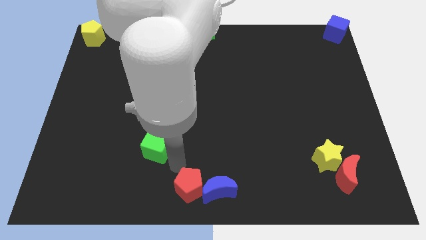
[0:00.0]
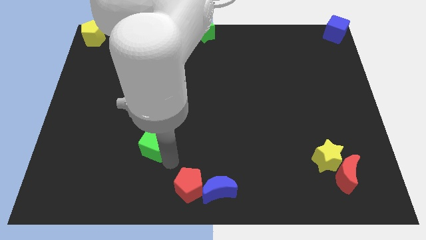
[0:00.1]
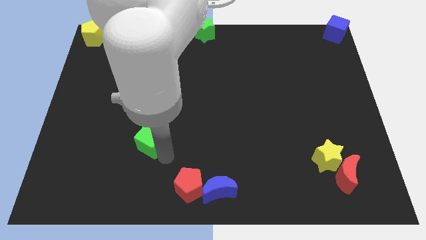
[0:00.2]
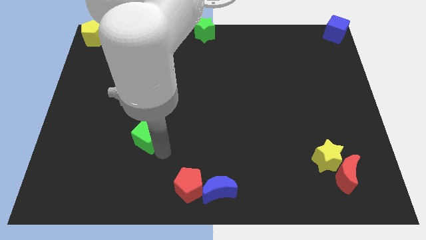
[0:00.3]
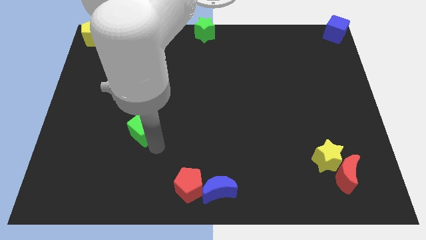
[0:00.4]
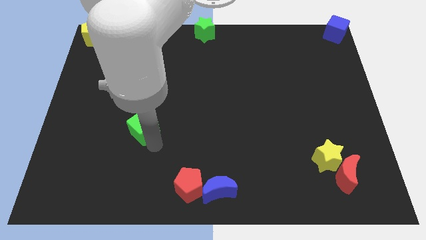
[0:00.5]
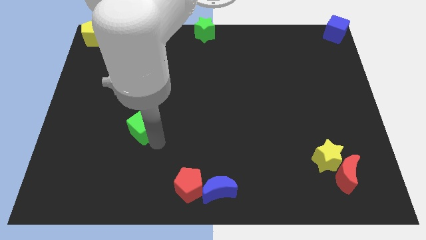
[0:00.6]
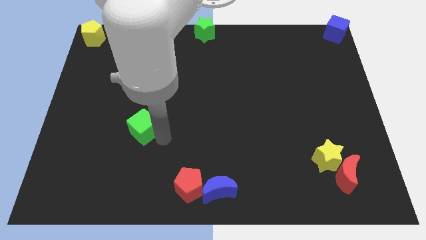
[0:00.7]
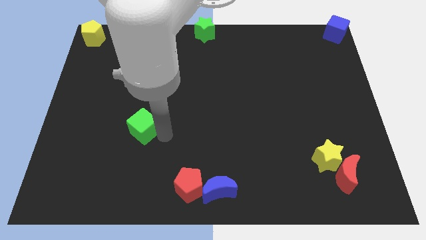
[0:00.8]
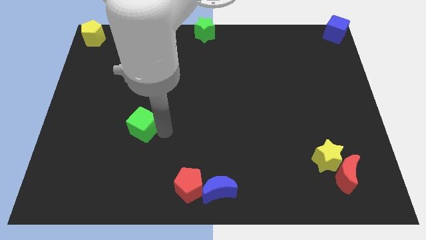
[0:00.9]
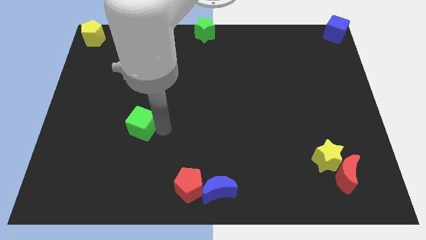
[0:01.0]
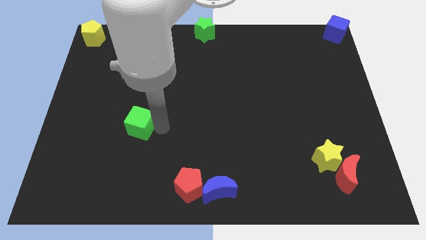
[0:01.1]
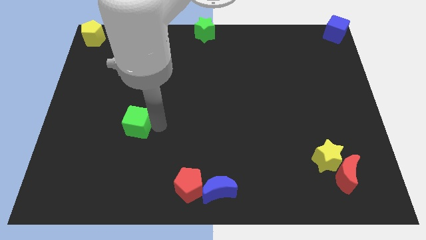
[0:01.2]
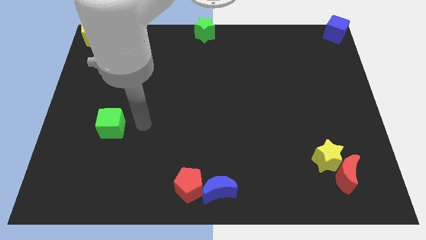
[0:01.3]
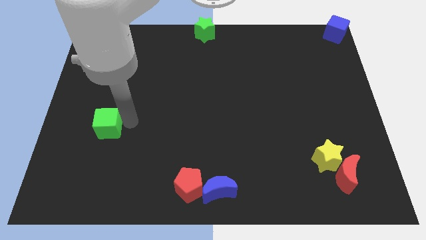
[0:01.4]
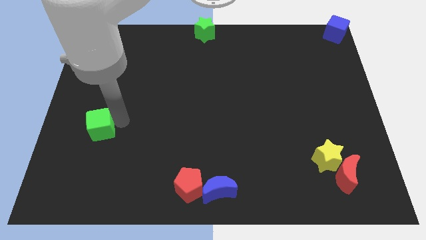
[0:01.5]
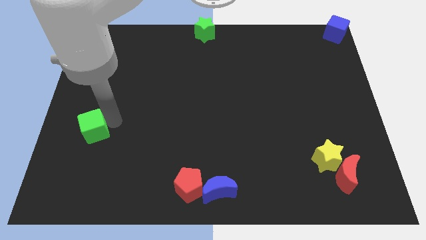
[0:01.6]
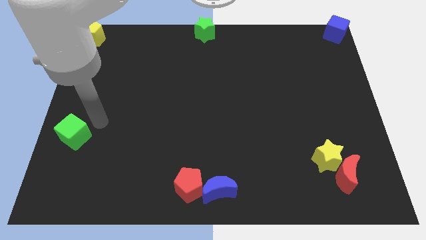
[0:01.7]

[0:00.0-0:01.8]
move the green cube towards the left side of the board

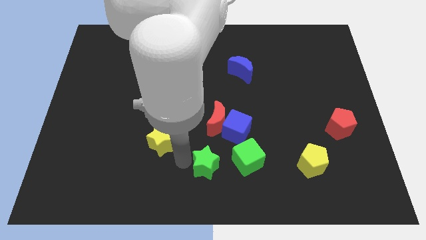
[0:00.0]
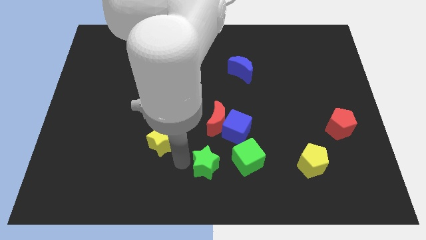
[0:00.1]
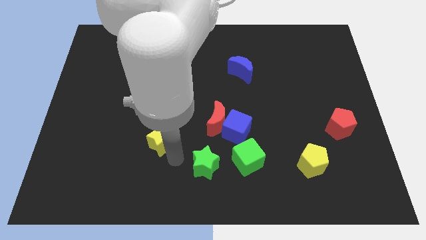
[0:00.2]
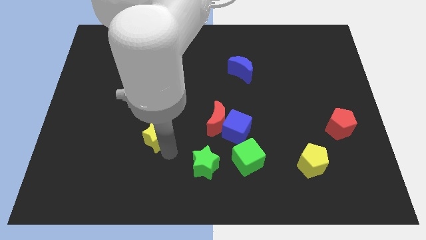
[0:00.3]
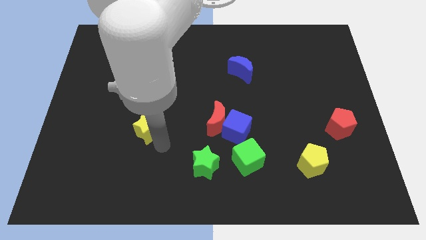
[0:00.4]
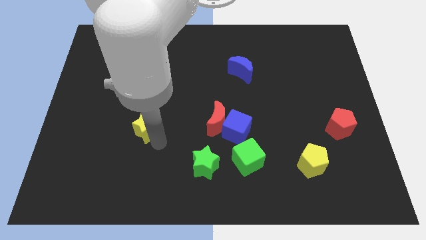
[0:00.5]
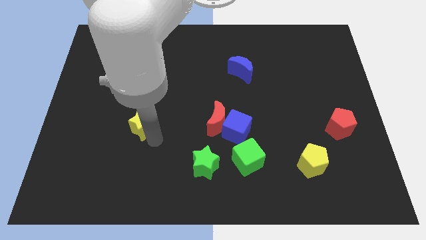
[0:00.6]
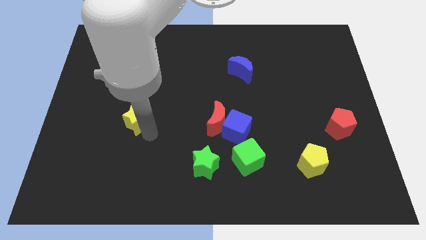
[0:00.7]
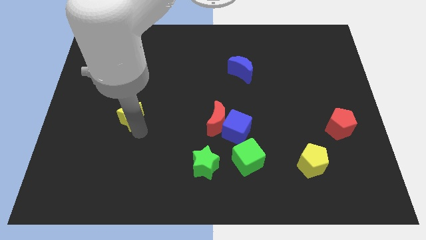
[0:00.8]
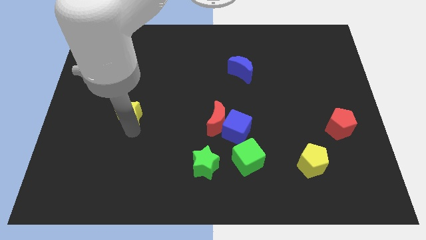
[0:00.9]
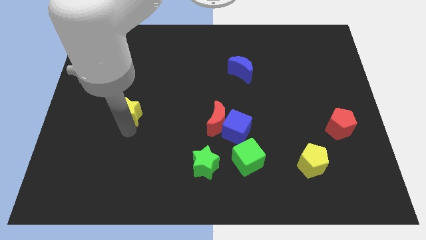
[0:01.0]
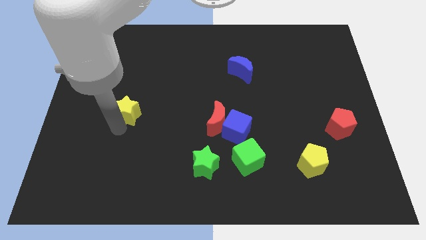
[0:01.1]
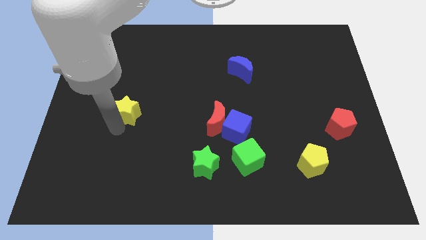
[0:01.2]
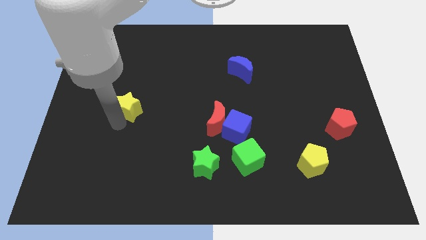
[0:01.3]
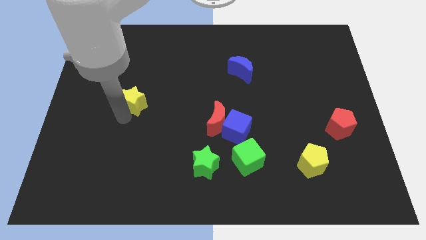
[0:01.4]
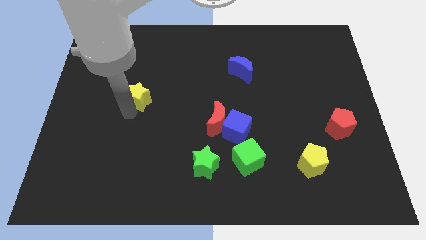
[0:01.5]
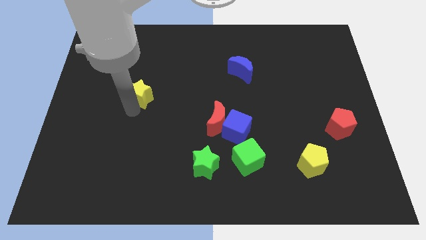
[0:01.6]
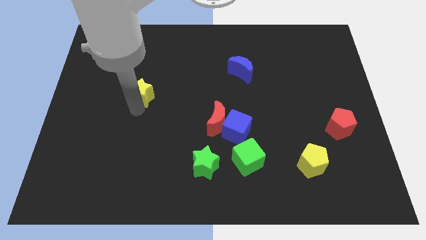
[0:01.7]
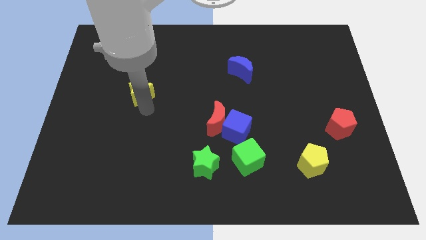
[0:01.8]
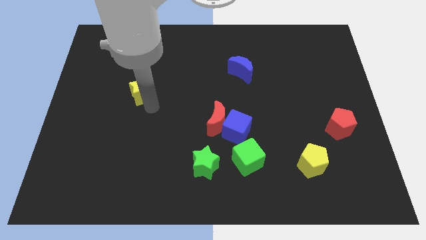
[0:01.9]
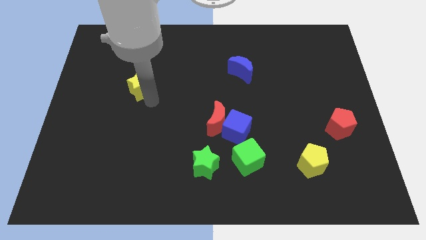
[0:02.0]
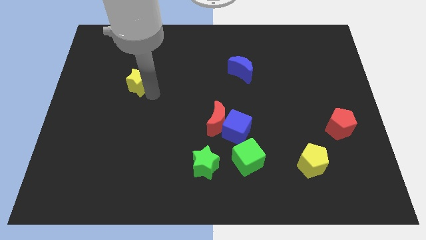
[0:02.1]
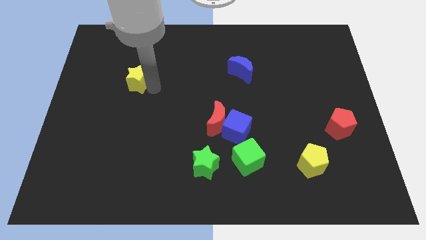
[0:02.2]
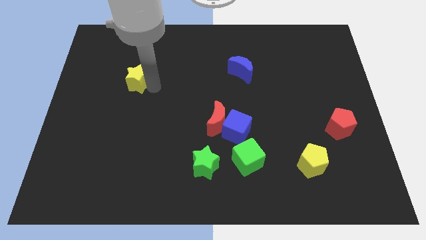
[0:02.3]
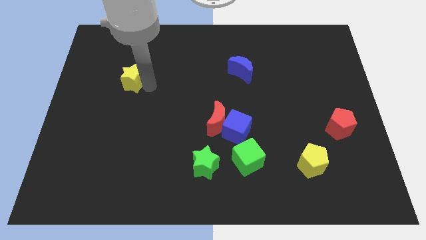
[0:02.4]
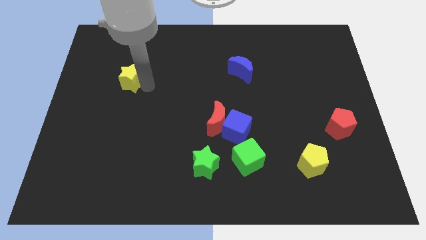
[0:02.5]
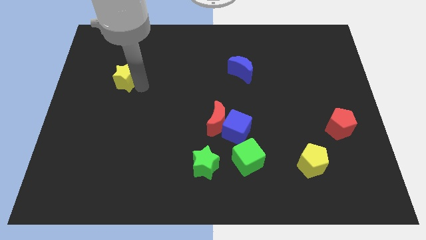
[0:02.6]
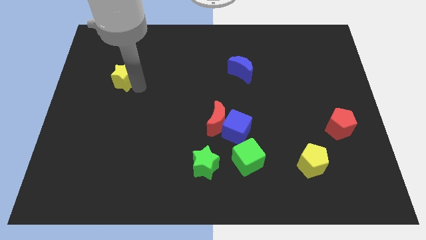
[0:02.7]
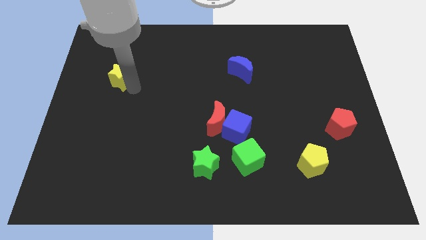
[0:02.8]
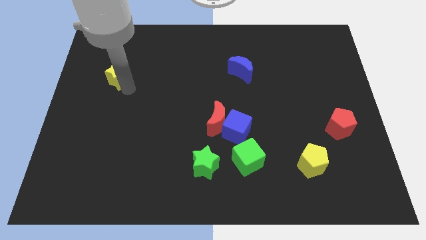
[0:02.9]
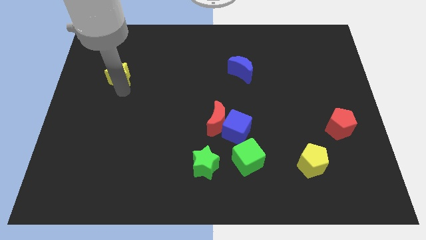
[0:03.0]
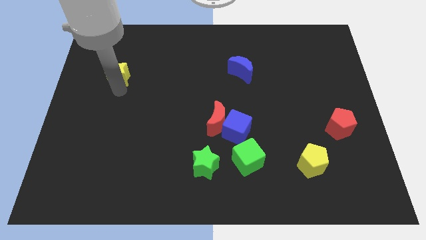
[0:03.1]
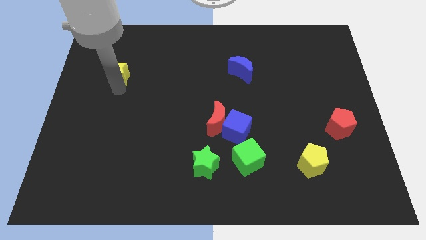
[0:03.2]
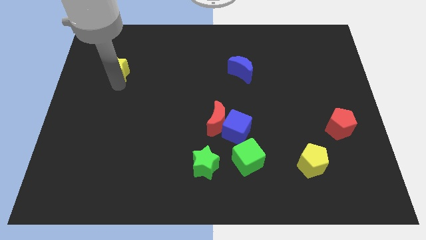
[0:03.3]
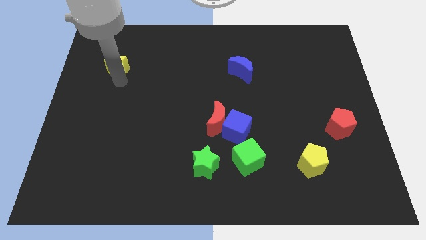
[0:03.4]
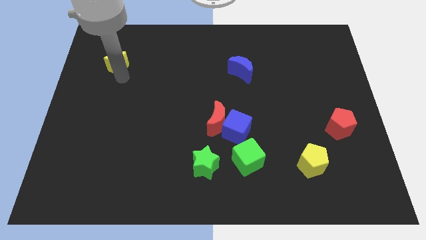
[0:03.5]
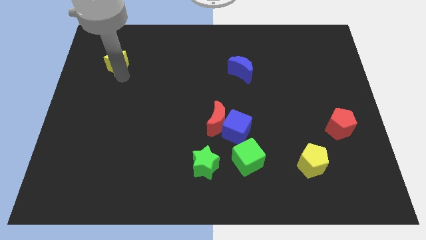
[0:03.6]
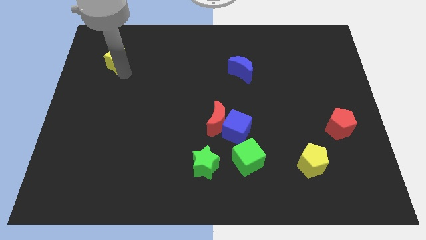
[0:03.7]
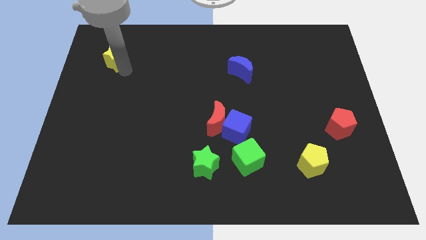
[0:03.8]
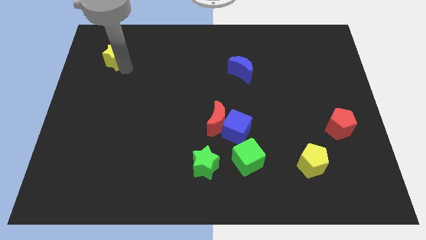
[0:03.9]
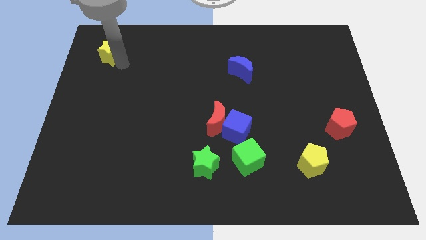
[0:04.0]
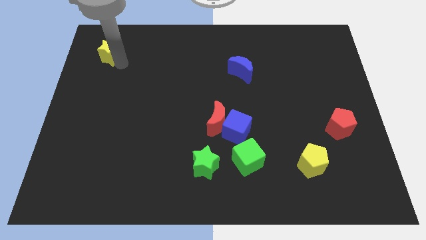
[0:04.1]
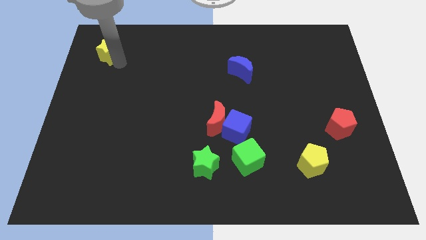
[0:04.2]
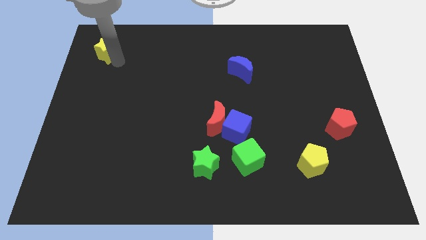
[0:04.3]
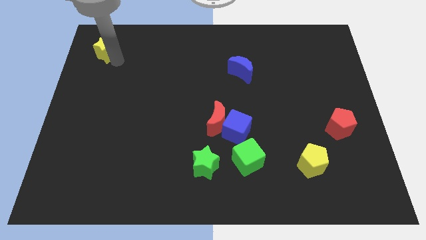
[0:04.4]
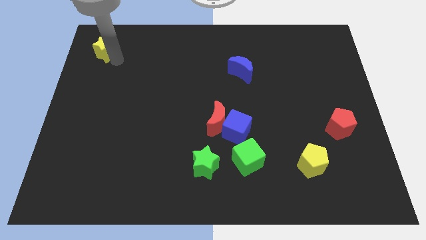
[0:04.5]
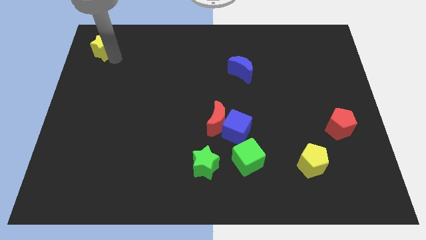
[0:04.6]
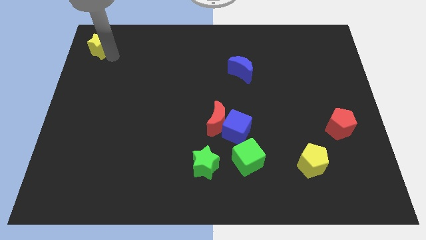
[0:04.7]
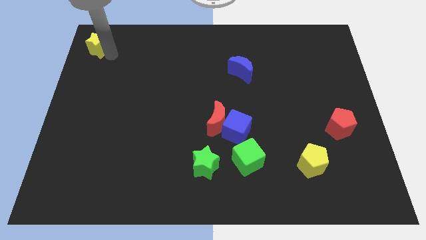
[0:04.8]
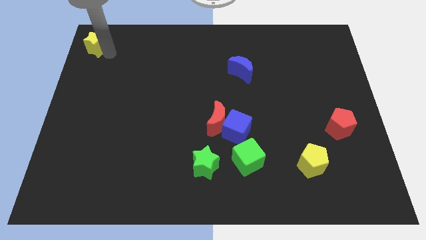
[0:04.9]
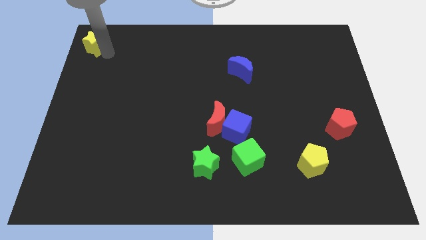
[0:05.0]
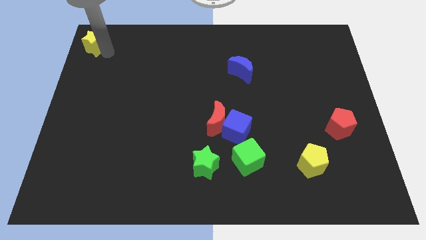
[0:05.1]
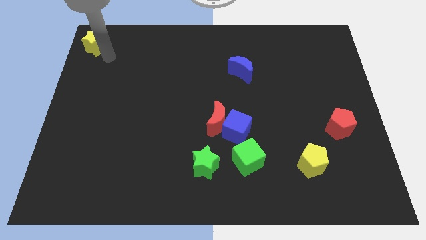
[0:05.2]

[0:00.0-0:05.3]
move the yellow star to the top left of the board

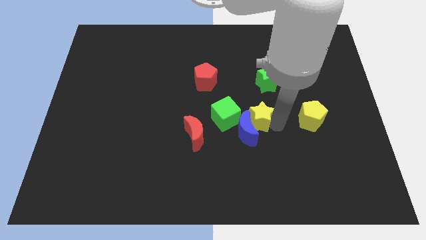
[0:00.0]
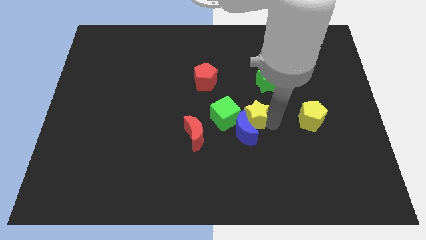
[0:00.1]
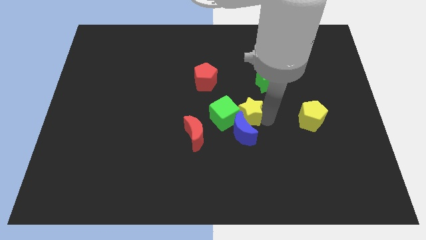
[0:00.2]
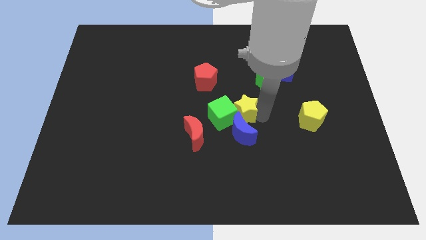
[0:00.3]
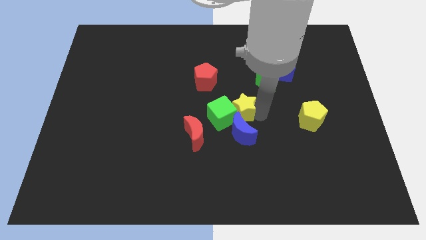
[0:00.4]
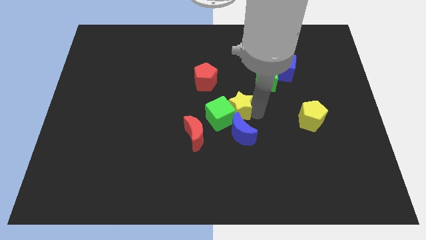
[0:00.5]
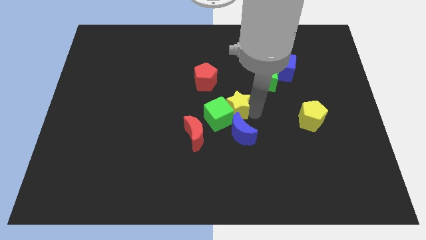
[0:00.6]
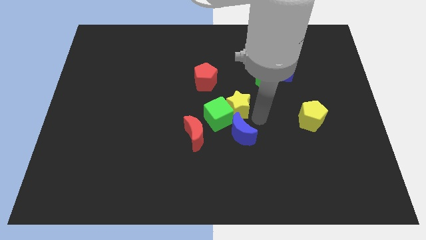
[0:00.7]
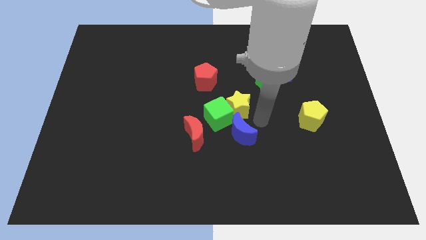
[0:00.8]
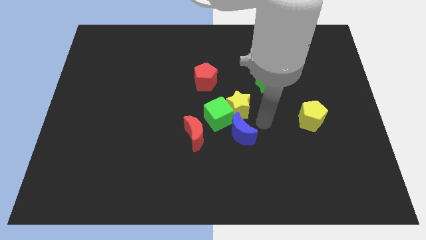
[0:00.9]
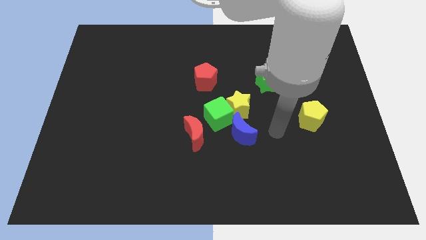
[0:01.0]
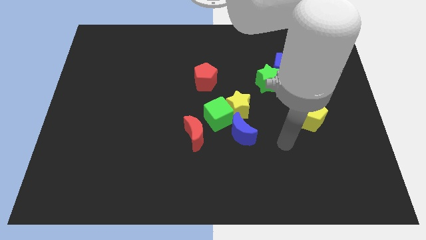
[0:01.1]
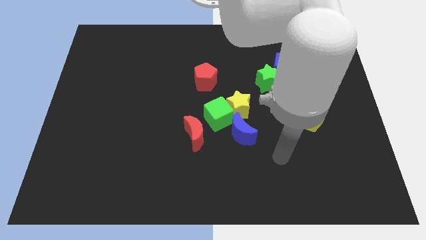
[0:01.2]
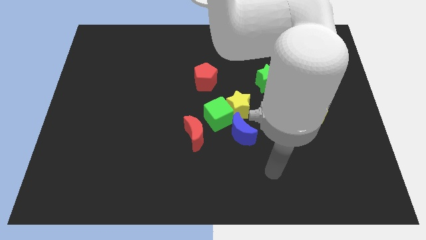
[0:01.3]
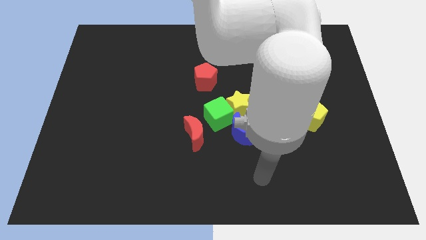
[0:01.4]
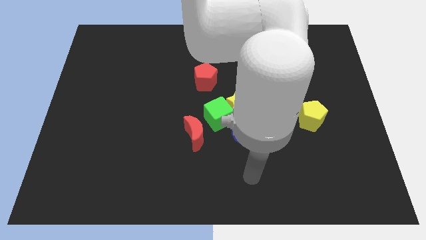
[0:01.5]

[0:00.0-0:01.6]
place the yellow star to the top right side of the green cube

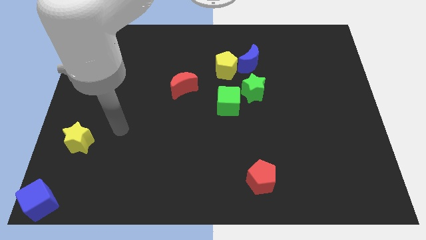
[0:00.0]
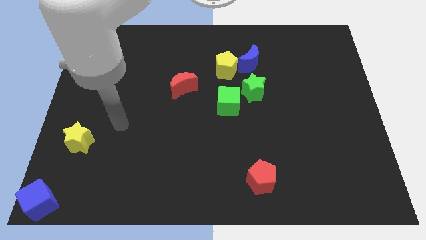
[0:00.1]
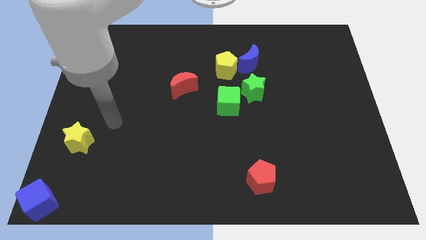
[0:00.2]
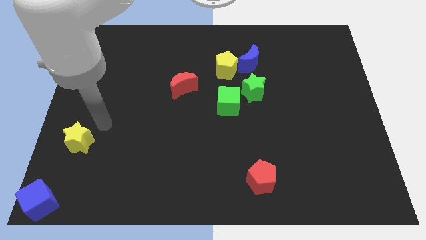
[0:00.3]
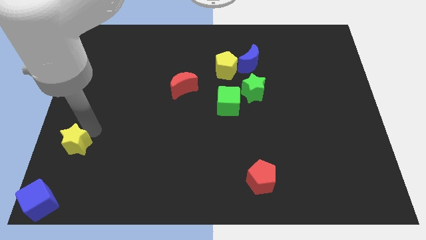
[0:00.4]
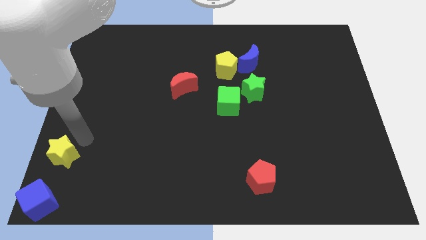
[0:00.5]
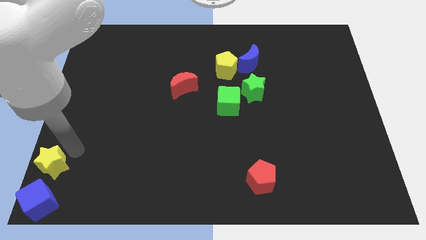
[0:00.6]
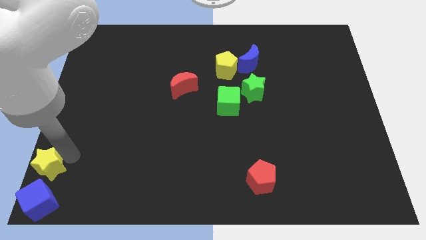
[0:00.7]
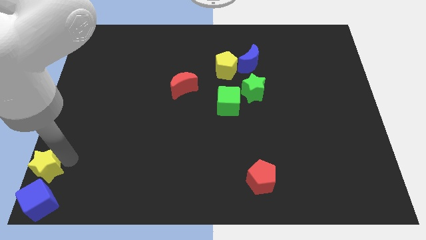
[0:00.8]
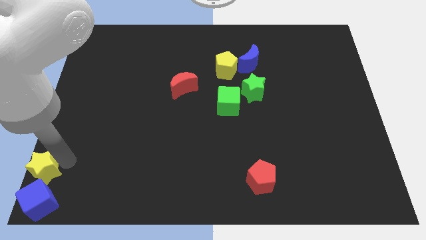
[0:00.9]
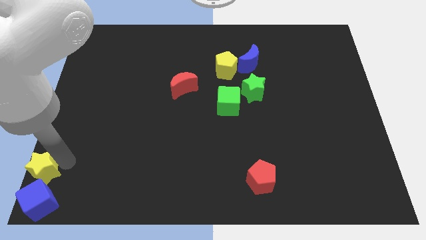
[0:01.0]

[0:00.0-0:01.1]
move yellow star towards blue cube
